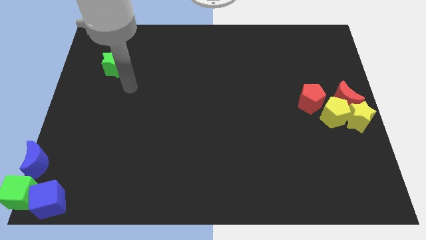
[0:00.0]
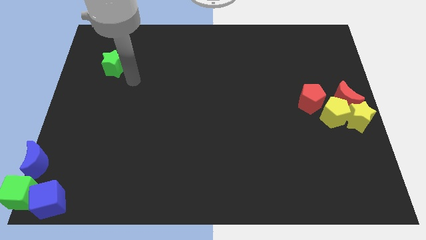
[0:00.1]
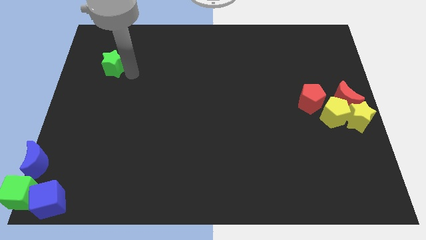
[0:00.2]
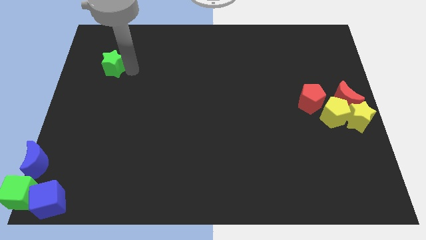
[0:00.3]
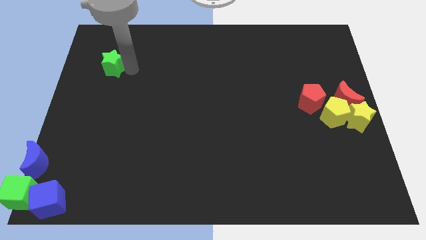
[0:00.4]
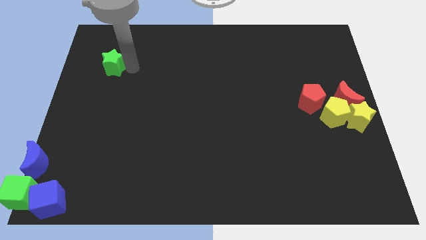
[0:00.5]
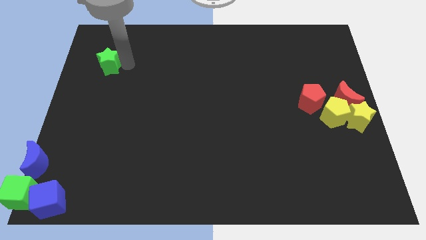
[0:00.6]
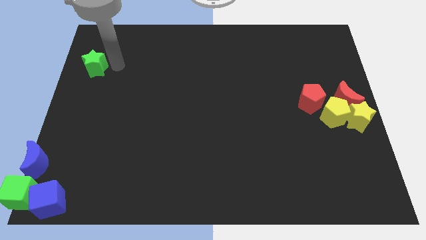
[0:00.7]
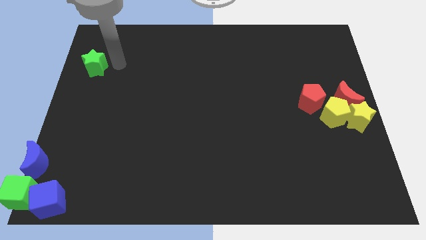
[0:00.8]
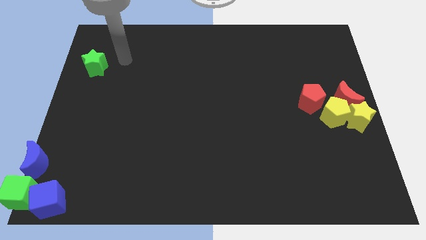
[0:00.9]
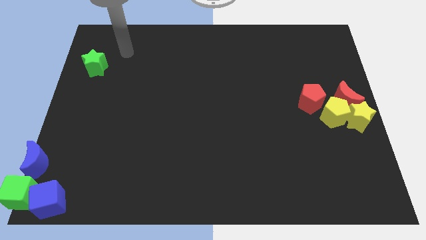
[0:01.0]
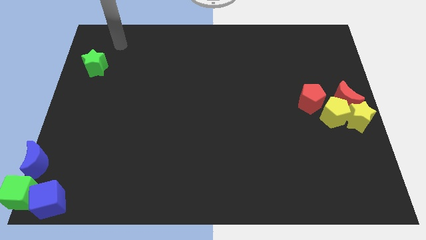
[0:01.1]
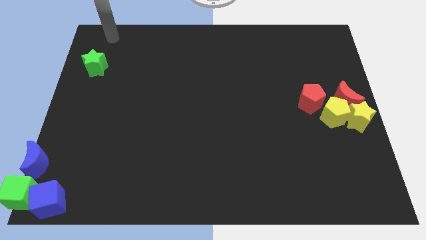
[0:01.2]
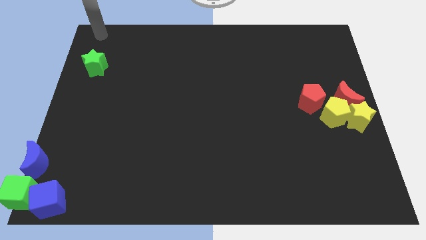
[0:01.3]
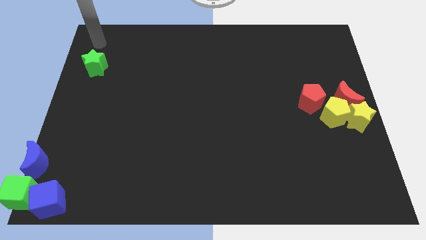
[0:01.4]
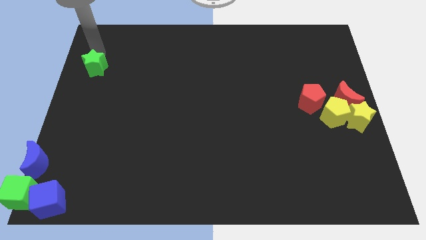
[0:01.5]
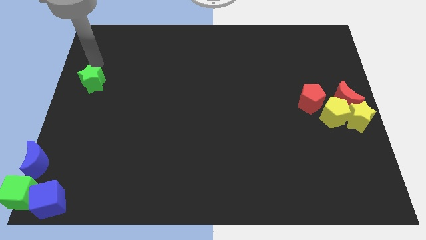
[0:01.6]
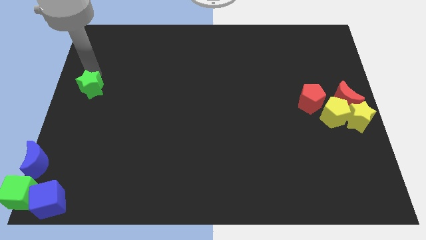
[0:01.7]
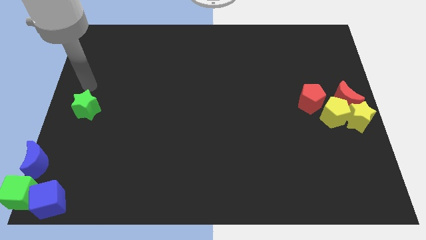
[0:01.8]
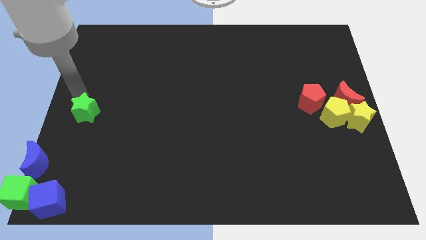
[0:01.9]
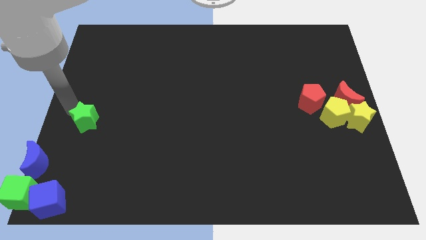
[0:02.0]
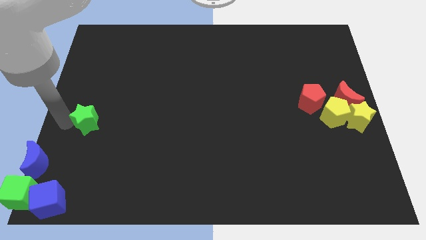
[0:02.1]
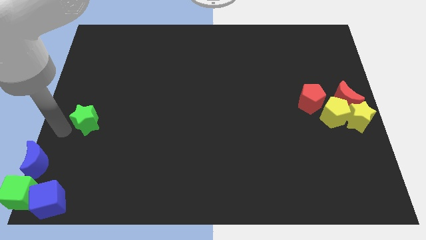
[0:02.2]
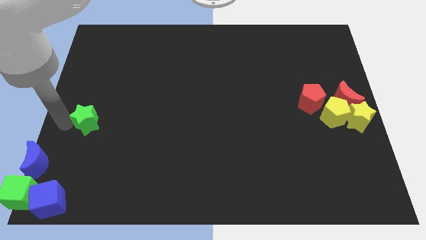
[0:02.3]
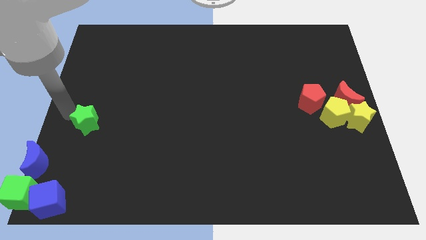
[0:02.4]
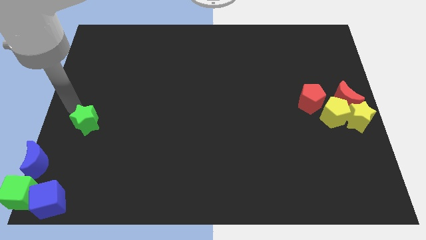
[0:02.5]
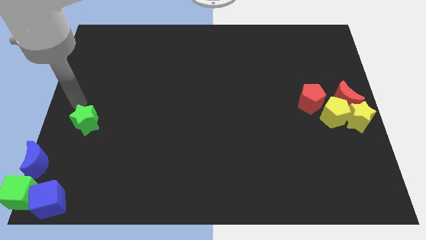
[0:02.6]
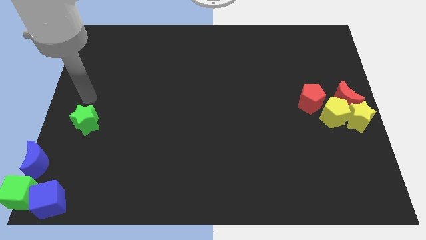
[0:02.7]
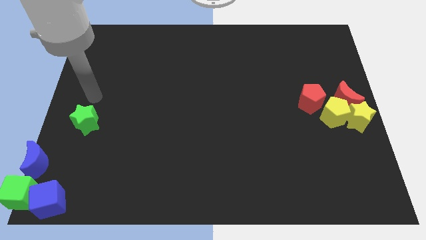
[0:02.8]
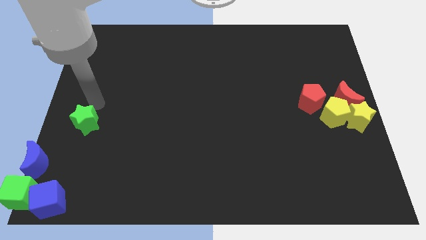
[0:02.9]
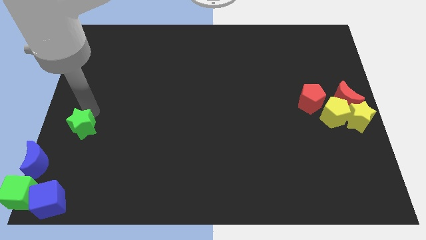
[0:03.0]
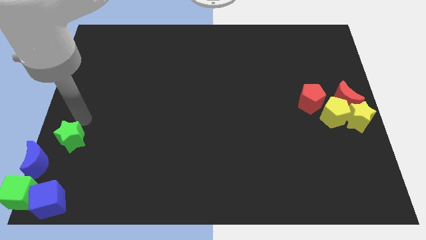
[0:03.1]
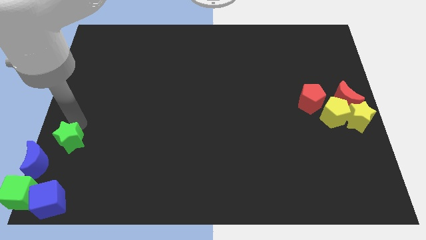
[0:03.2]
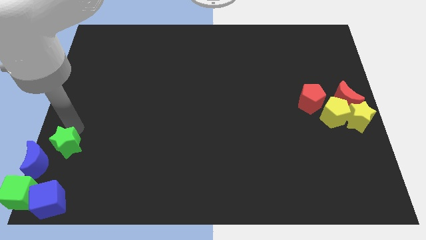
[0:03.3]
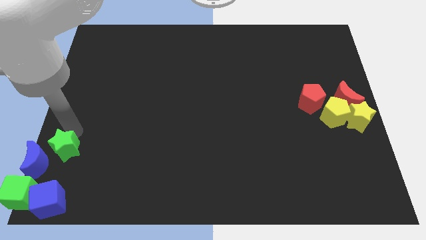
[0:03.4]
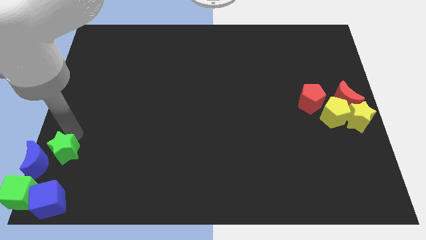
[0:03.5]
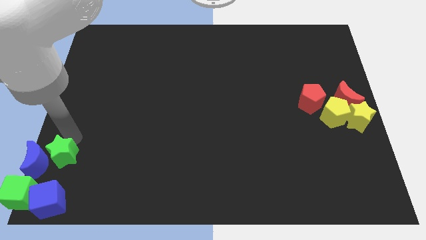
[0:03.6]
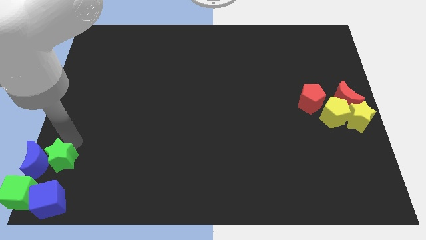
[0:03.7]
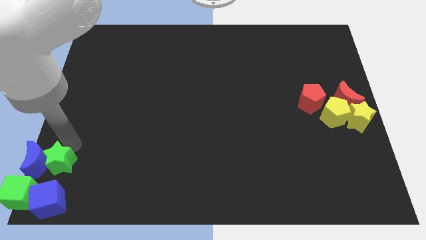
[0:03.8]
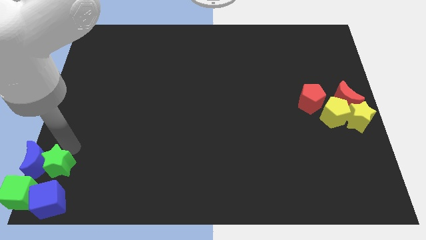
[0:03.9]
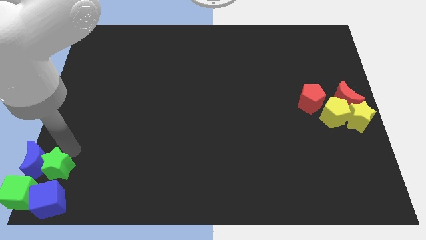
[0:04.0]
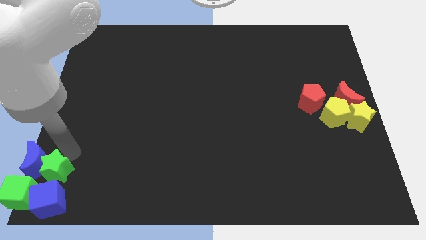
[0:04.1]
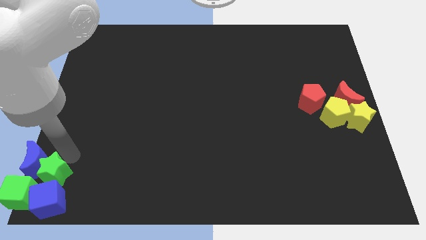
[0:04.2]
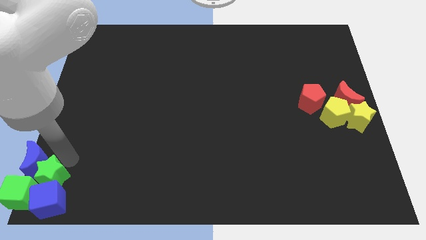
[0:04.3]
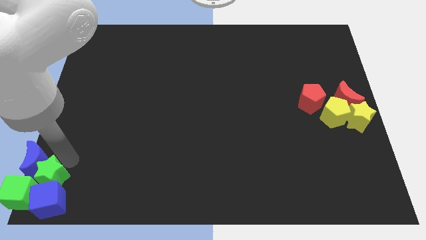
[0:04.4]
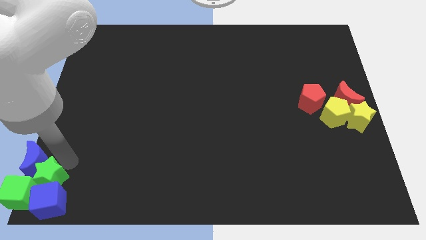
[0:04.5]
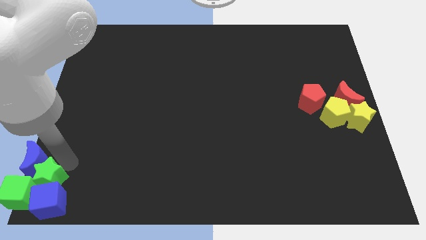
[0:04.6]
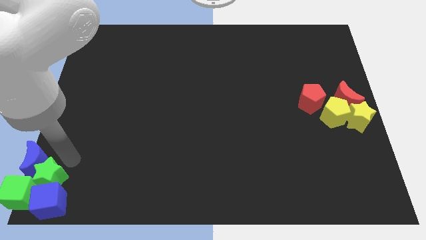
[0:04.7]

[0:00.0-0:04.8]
push the green star into the green cube

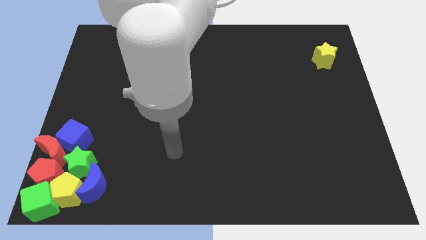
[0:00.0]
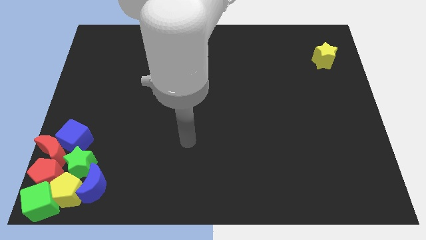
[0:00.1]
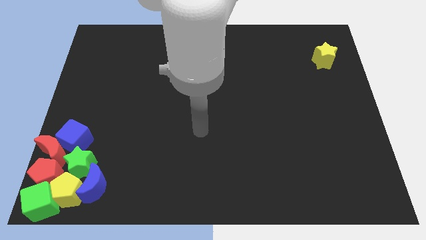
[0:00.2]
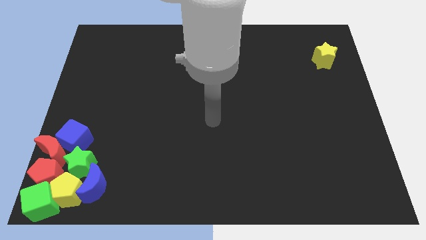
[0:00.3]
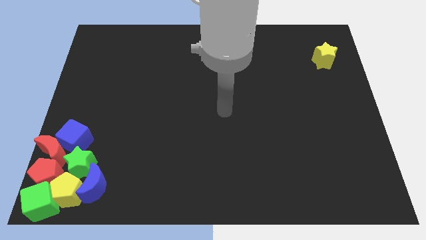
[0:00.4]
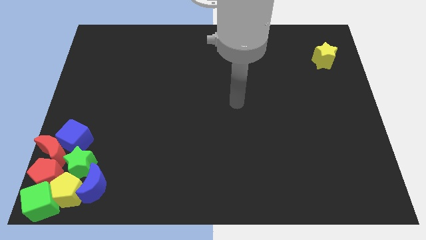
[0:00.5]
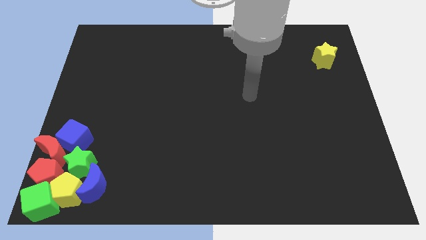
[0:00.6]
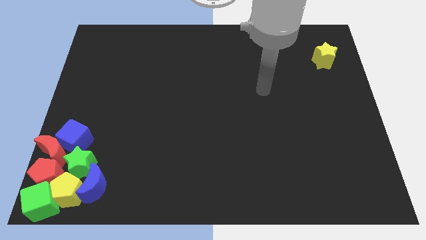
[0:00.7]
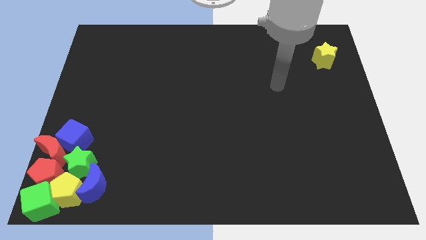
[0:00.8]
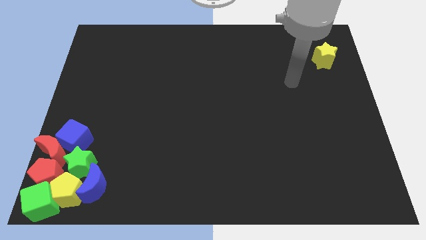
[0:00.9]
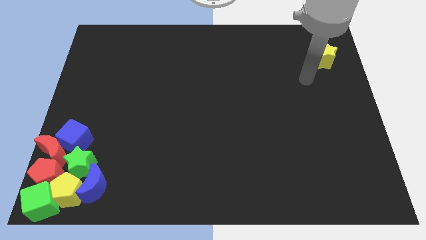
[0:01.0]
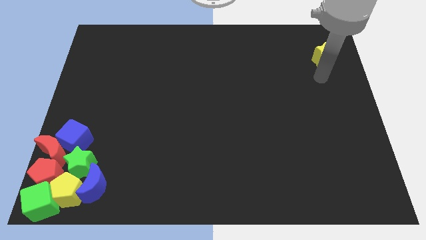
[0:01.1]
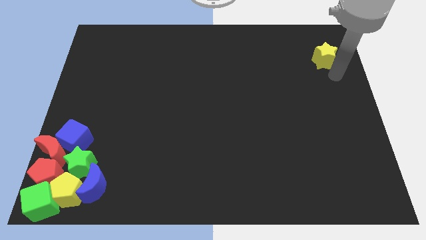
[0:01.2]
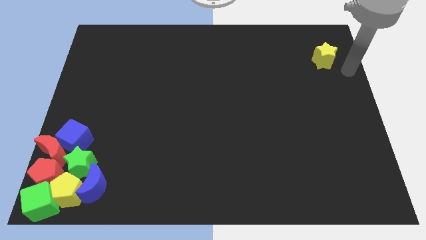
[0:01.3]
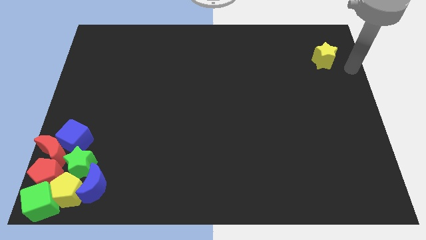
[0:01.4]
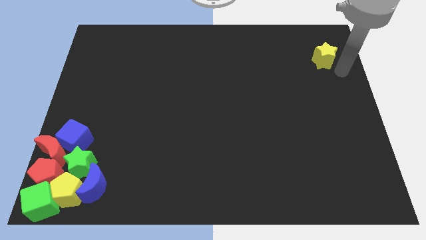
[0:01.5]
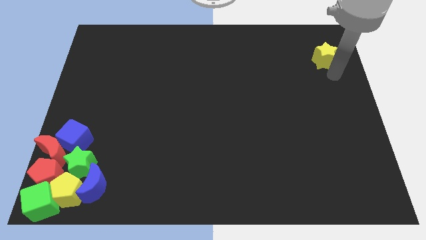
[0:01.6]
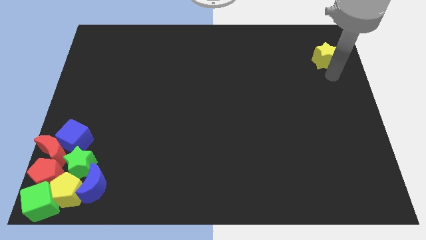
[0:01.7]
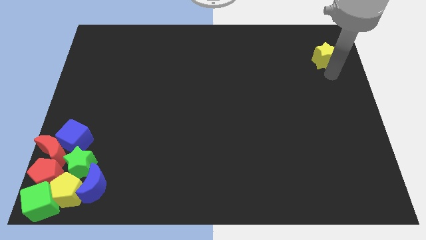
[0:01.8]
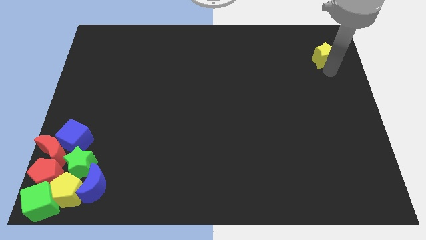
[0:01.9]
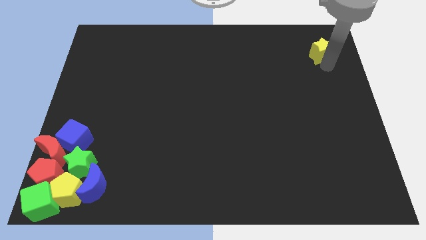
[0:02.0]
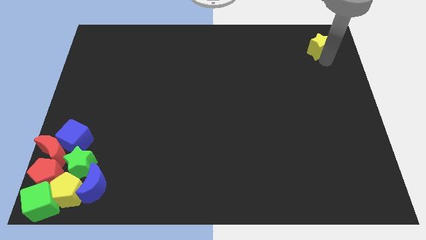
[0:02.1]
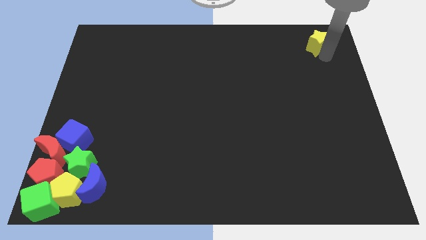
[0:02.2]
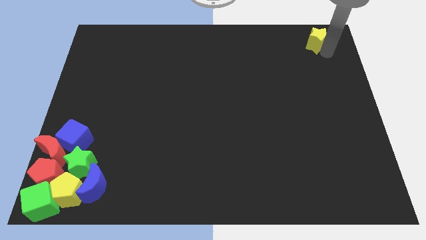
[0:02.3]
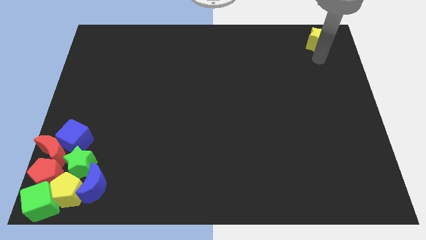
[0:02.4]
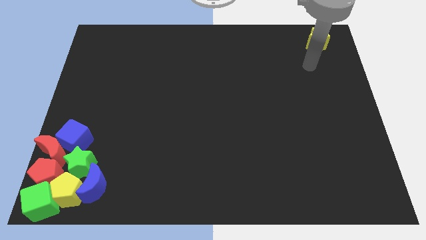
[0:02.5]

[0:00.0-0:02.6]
move the yellow star to the top

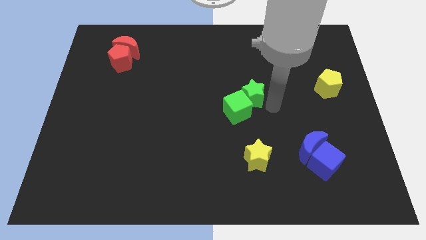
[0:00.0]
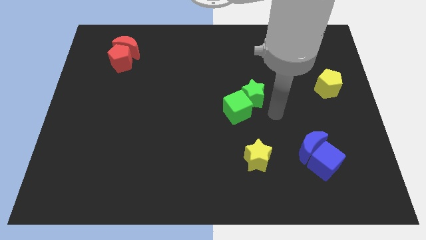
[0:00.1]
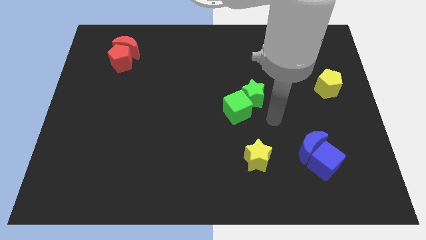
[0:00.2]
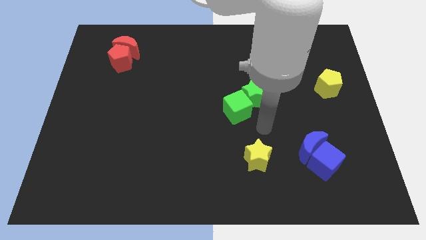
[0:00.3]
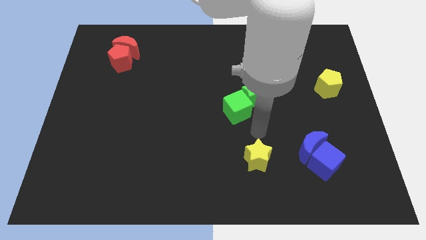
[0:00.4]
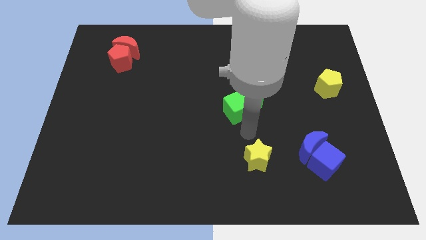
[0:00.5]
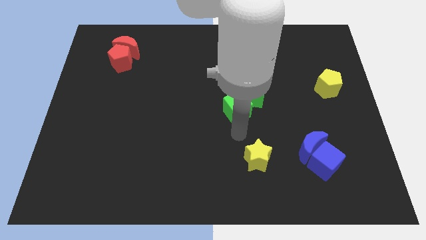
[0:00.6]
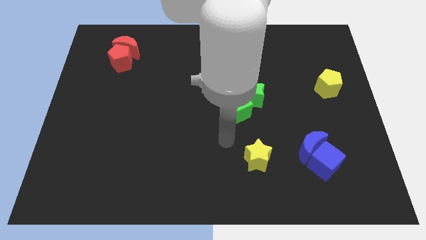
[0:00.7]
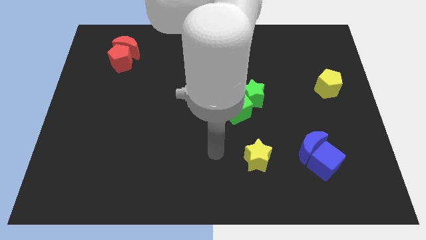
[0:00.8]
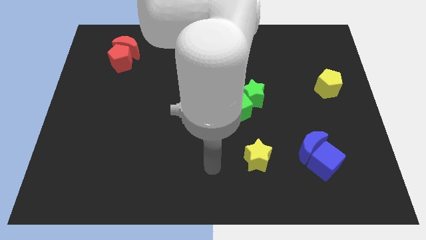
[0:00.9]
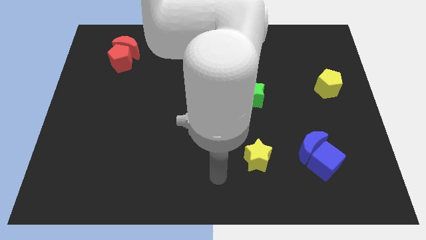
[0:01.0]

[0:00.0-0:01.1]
move the arm away from the green star

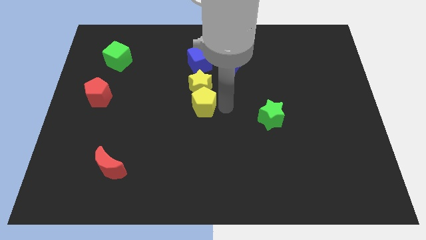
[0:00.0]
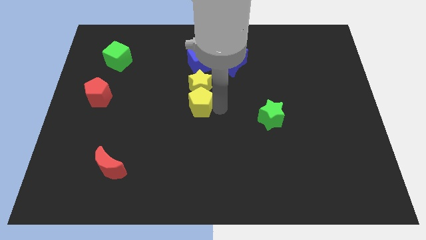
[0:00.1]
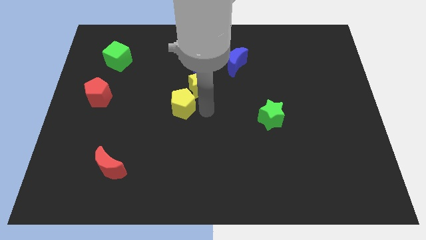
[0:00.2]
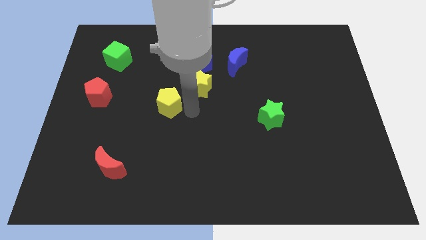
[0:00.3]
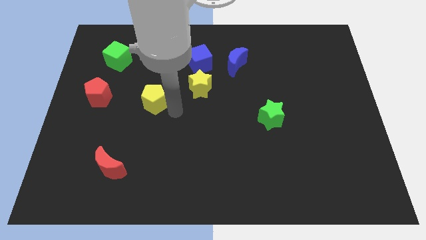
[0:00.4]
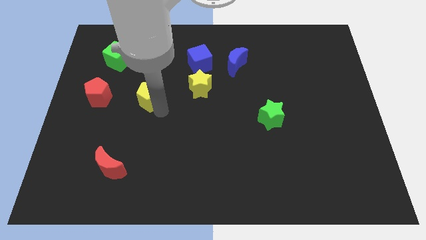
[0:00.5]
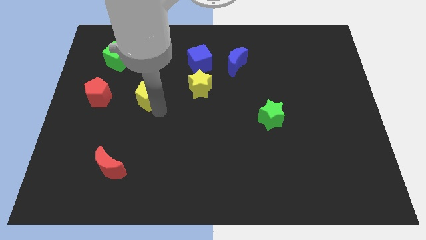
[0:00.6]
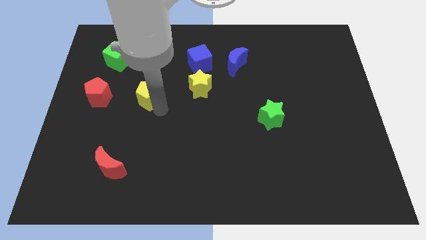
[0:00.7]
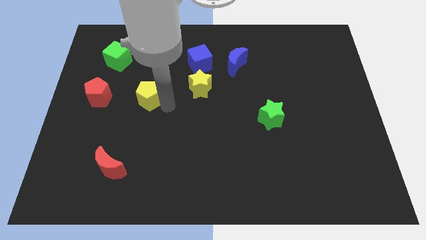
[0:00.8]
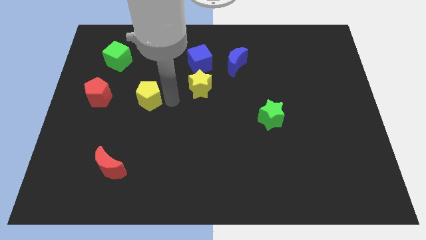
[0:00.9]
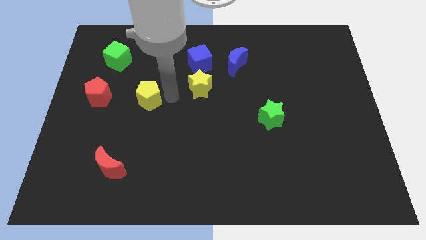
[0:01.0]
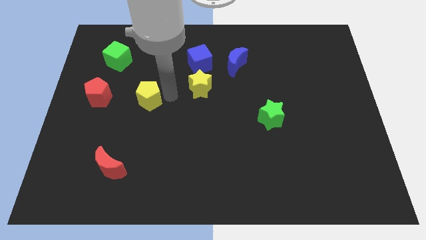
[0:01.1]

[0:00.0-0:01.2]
slide the yellow pentagon towards left a bit
